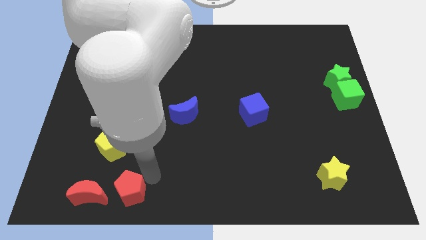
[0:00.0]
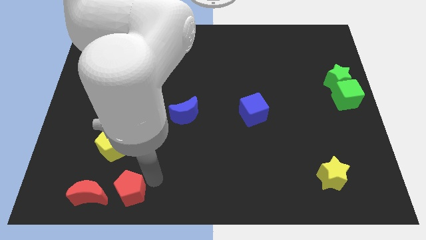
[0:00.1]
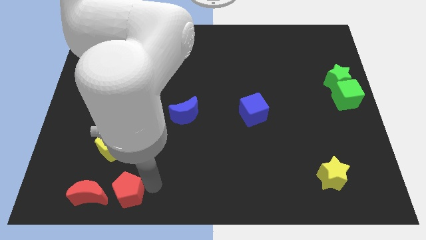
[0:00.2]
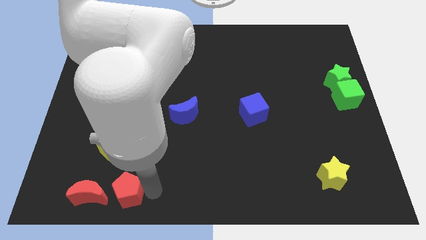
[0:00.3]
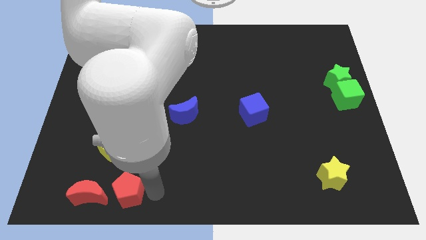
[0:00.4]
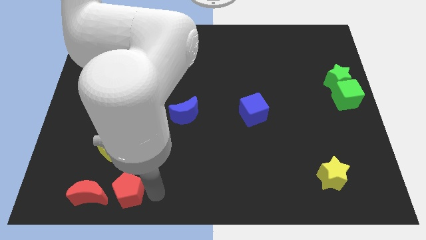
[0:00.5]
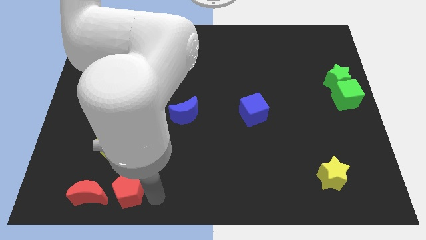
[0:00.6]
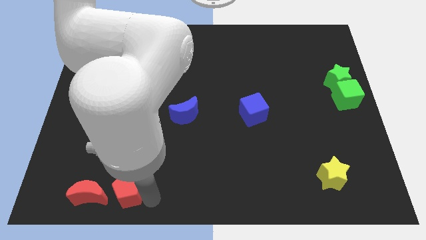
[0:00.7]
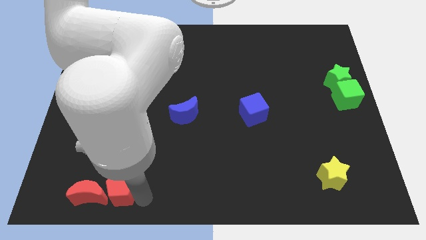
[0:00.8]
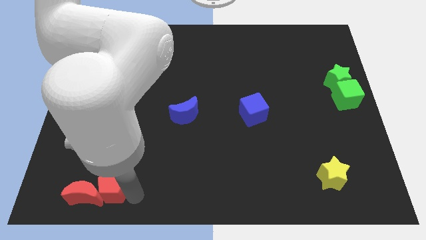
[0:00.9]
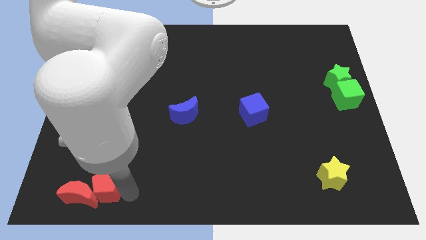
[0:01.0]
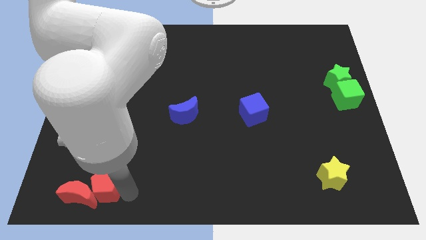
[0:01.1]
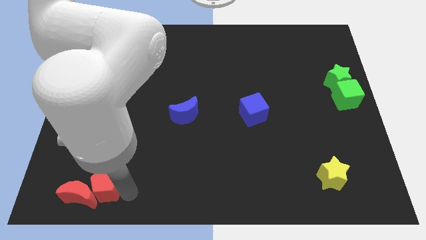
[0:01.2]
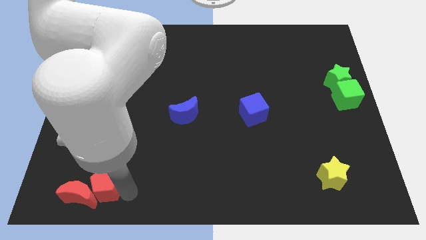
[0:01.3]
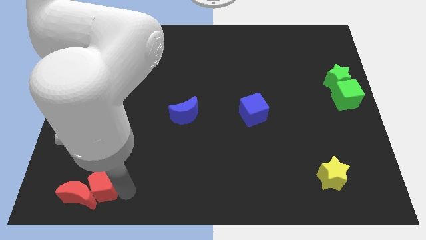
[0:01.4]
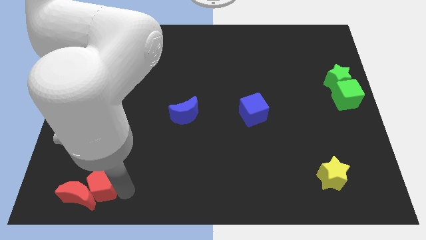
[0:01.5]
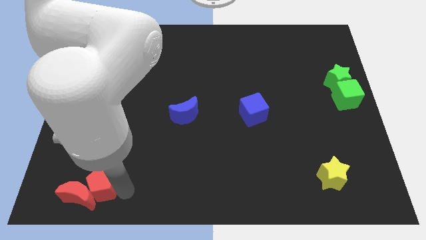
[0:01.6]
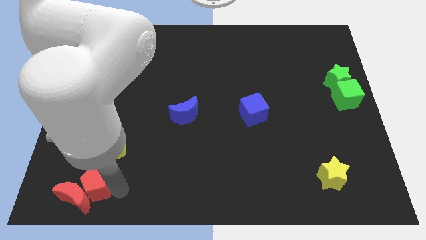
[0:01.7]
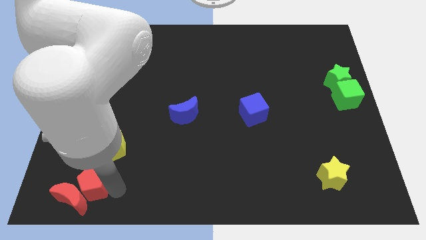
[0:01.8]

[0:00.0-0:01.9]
push the red pentagon to the right top of the red crescent

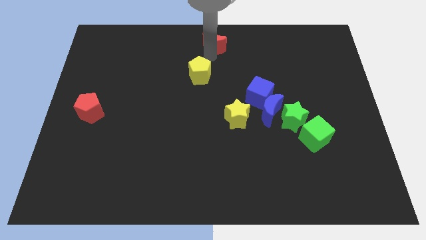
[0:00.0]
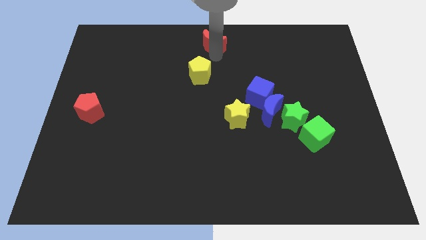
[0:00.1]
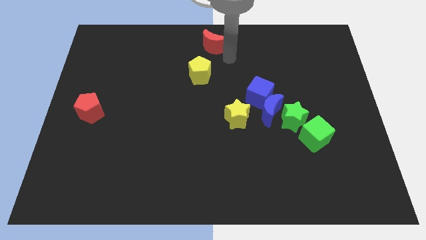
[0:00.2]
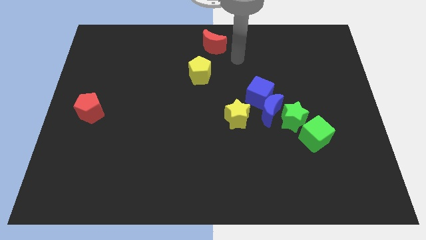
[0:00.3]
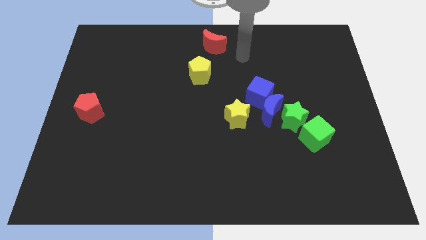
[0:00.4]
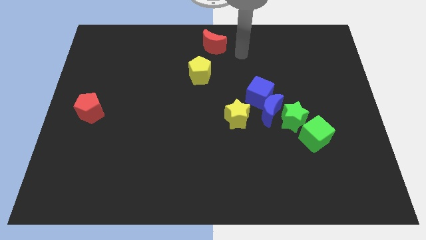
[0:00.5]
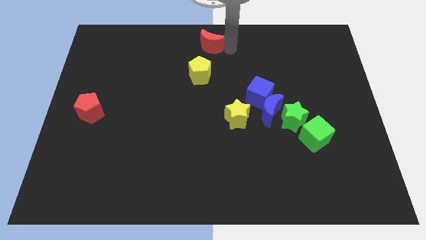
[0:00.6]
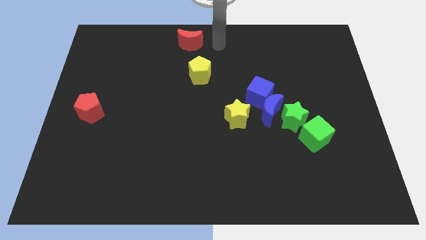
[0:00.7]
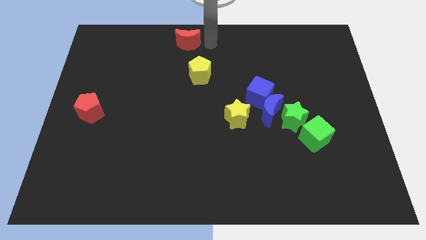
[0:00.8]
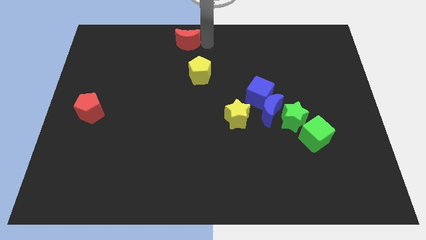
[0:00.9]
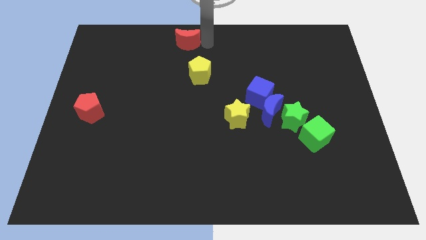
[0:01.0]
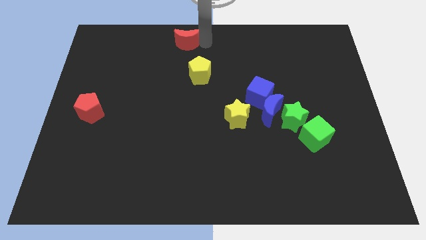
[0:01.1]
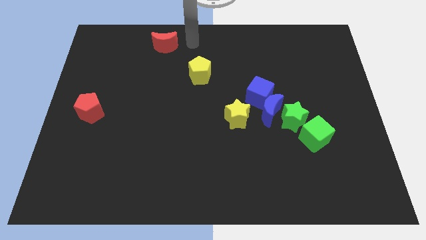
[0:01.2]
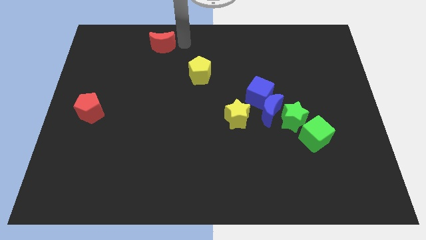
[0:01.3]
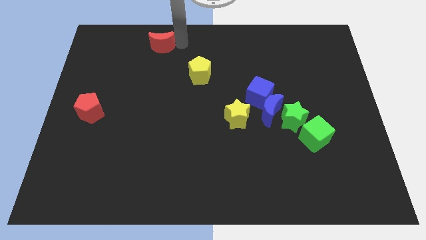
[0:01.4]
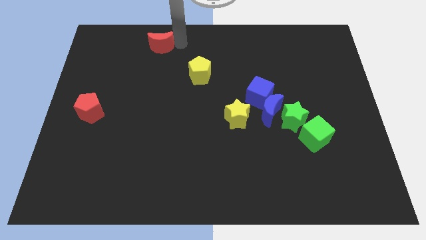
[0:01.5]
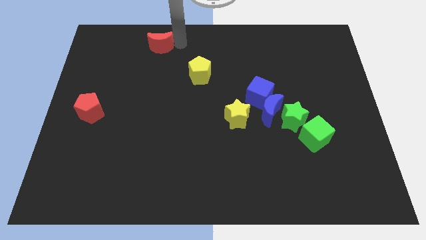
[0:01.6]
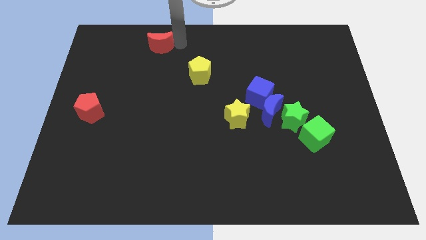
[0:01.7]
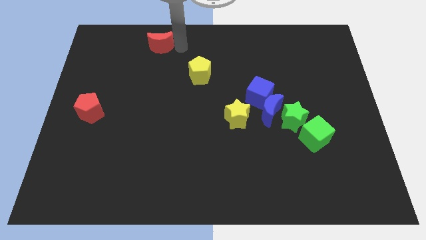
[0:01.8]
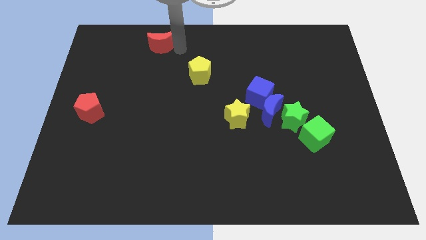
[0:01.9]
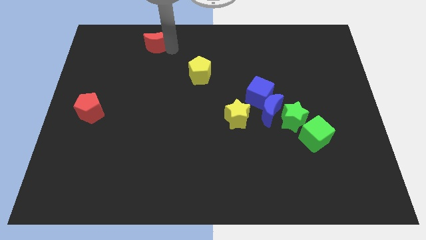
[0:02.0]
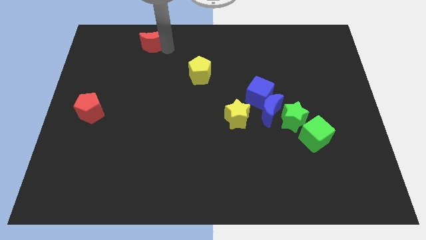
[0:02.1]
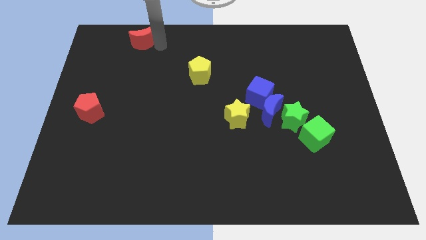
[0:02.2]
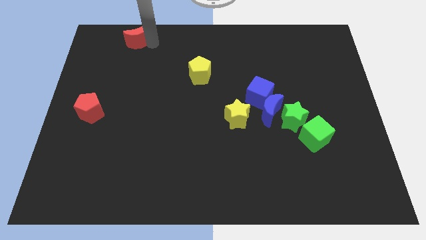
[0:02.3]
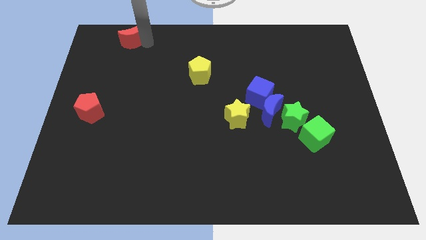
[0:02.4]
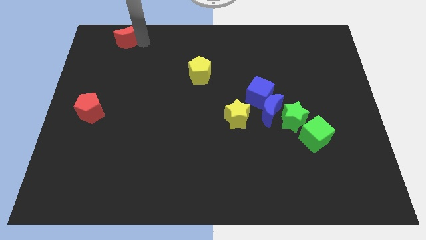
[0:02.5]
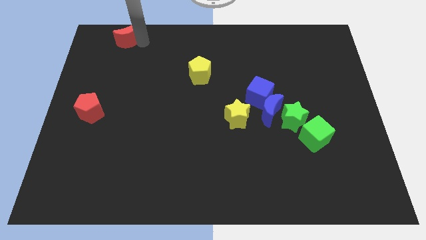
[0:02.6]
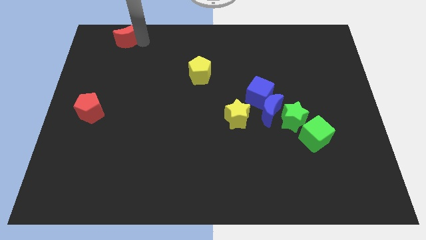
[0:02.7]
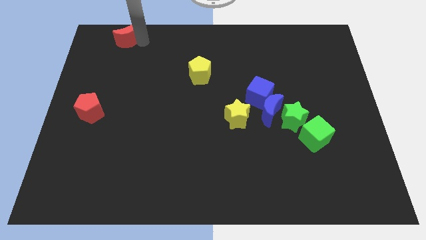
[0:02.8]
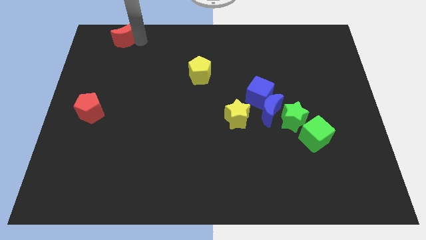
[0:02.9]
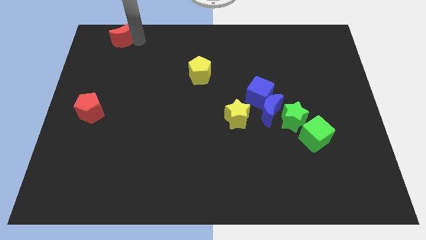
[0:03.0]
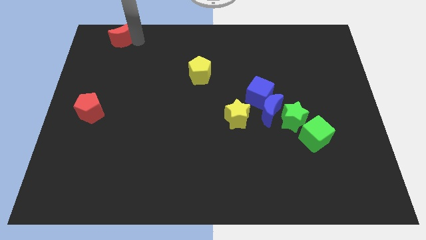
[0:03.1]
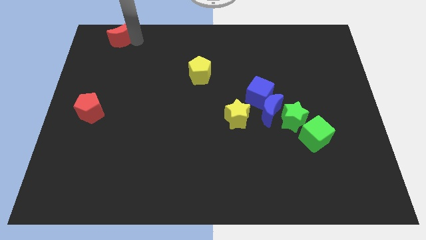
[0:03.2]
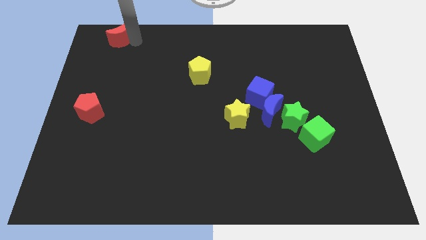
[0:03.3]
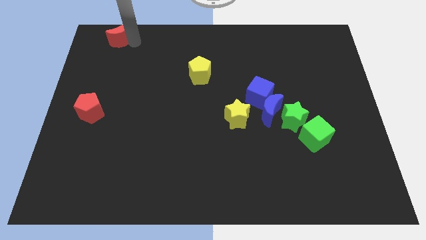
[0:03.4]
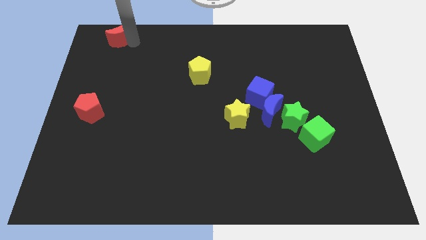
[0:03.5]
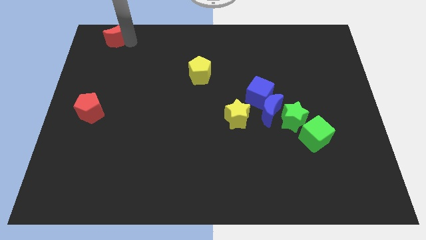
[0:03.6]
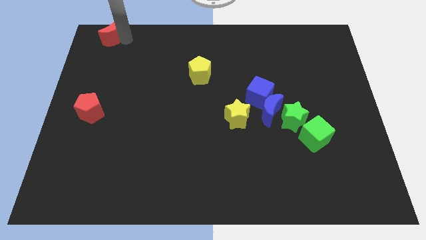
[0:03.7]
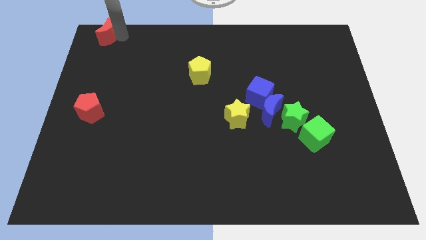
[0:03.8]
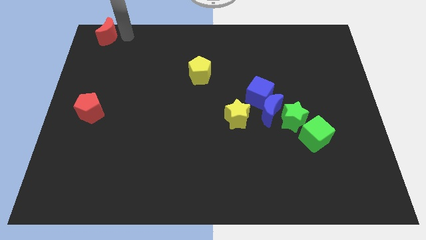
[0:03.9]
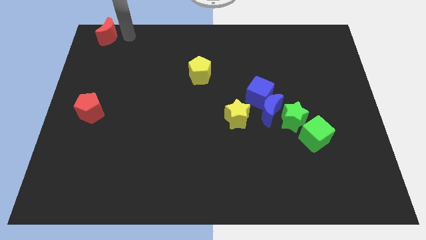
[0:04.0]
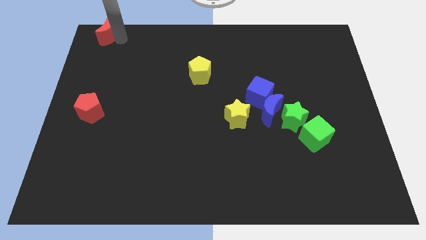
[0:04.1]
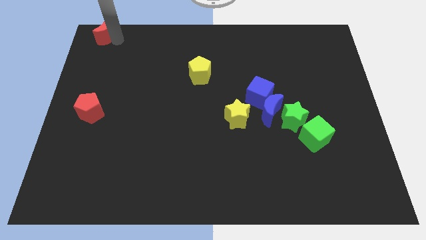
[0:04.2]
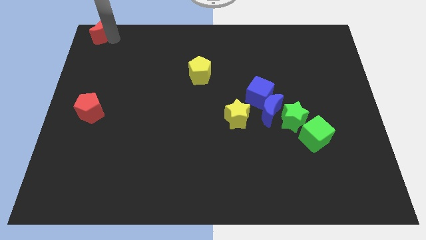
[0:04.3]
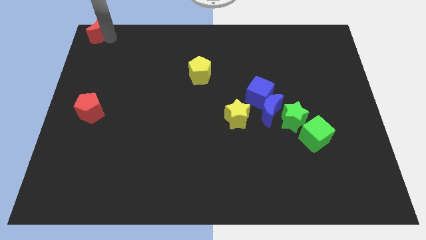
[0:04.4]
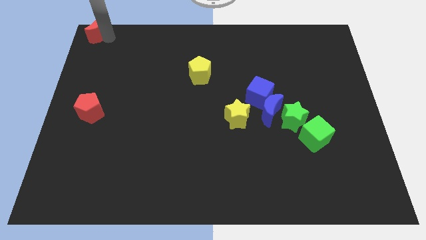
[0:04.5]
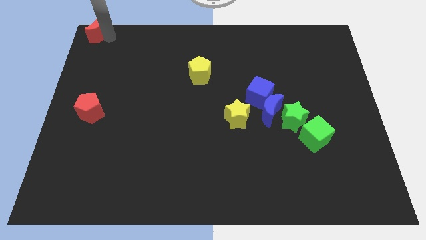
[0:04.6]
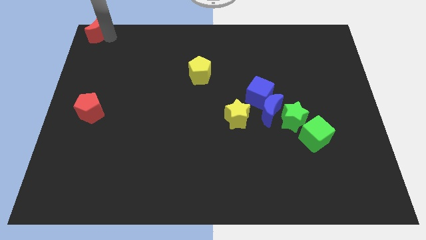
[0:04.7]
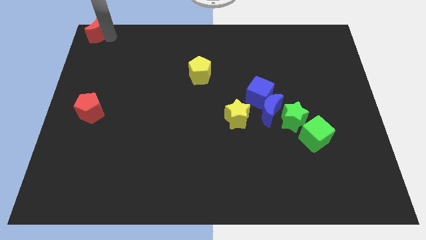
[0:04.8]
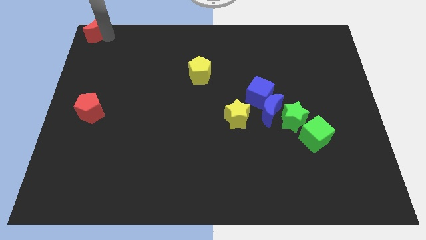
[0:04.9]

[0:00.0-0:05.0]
push the red crescent to the left top of the board

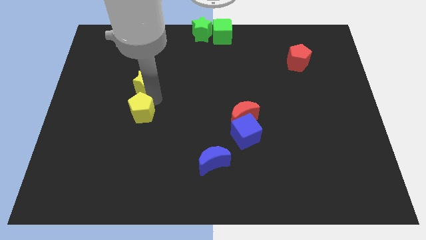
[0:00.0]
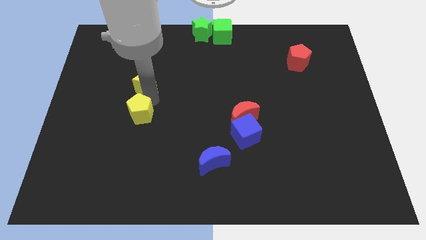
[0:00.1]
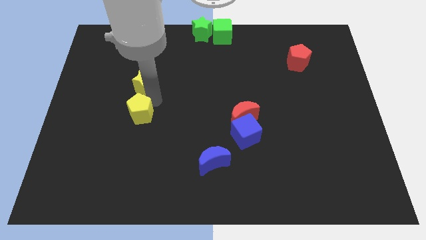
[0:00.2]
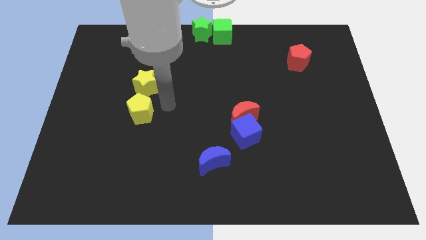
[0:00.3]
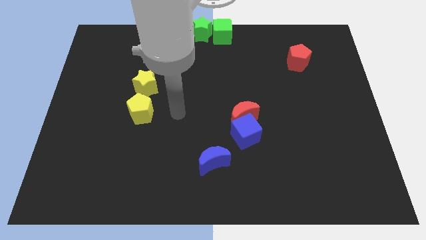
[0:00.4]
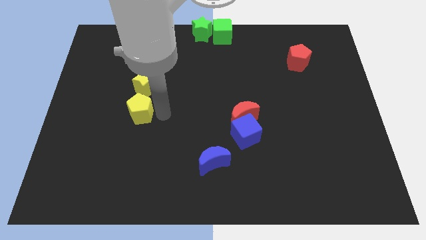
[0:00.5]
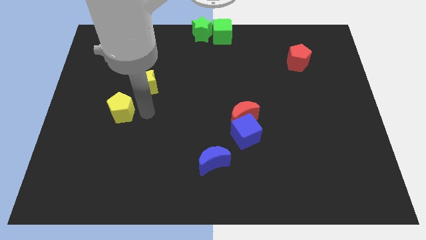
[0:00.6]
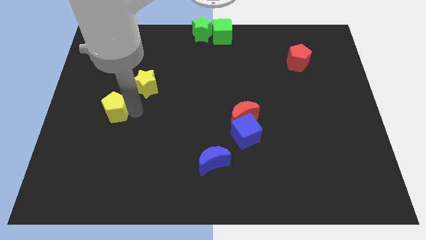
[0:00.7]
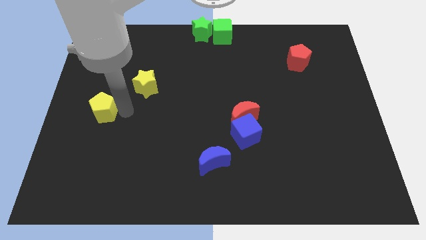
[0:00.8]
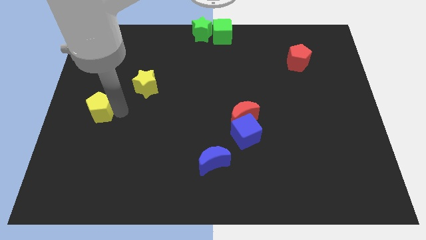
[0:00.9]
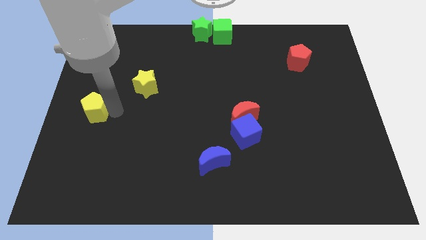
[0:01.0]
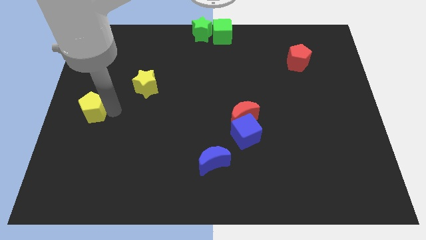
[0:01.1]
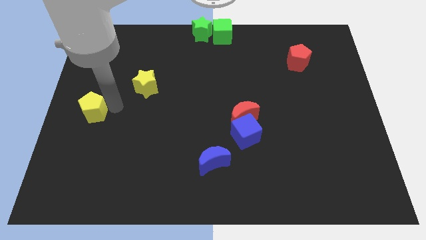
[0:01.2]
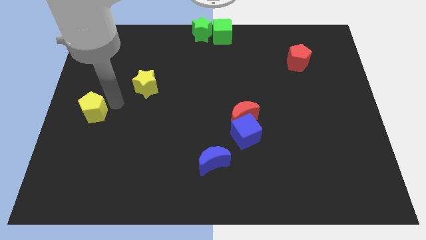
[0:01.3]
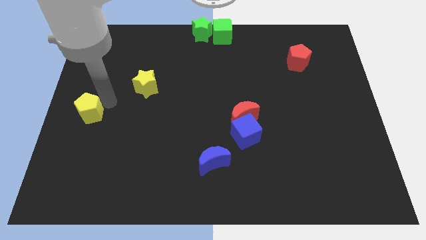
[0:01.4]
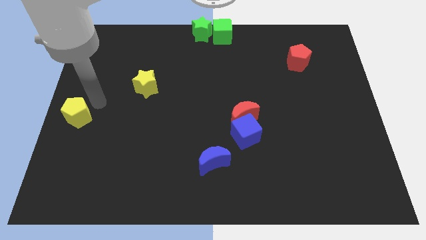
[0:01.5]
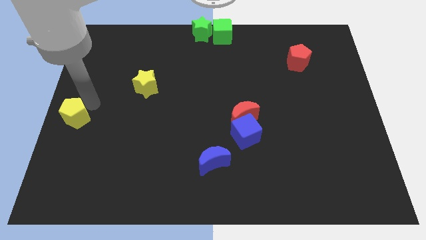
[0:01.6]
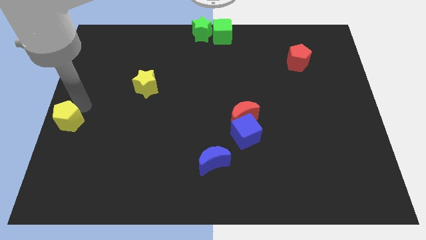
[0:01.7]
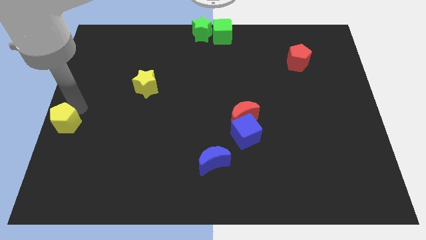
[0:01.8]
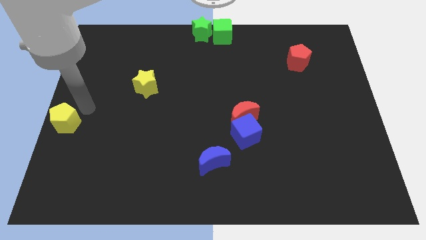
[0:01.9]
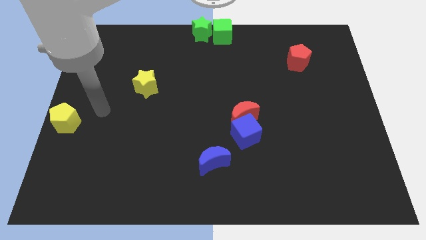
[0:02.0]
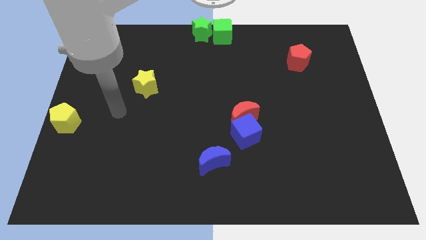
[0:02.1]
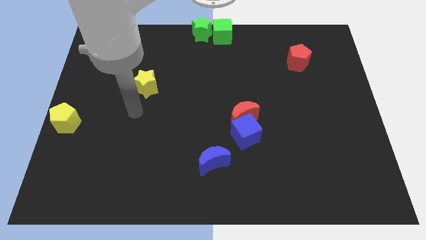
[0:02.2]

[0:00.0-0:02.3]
push the yellow pentagon towards the center left side of the board
